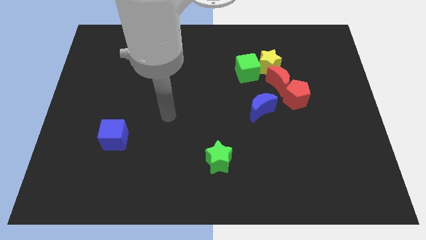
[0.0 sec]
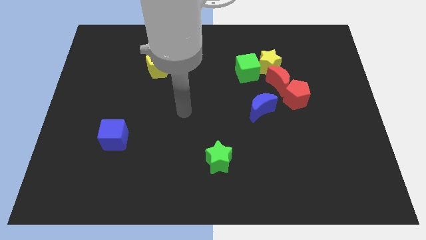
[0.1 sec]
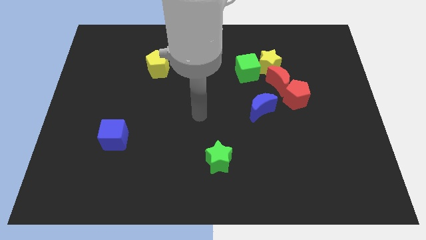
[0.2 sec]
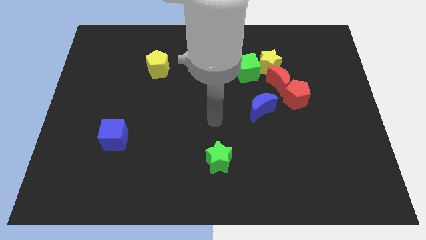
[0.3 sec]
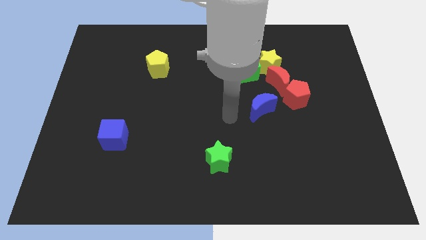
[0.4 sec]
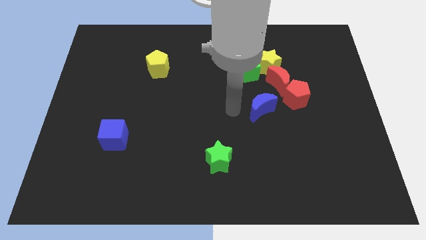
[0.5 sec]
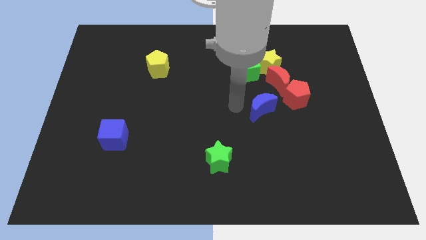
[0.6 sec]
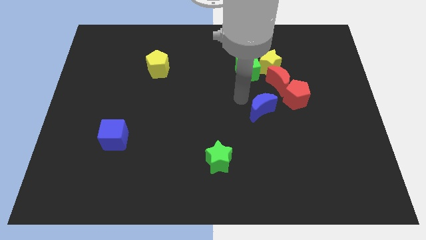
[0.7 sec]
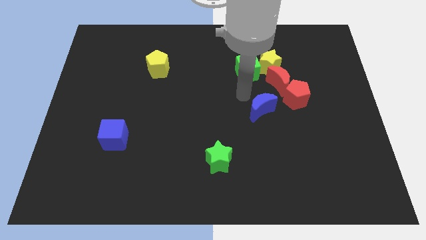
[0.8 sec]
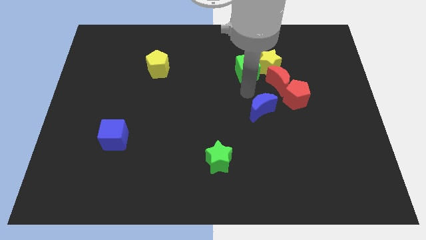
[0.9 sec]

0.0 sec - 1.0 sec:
go near the green cube

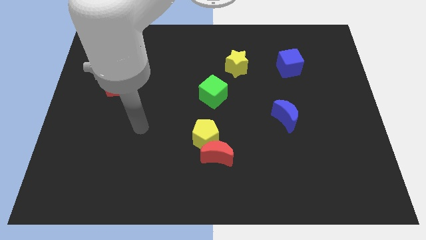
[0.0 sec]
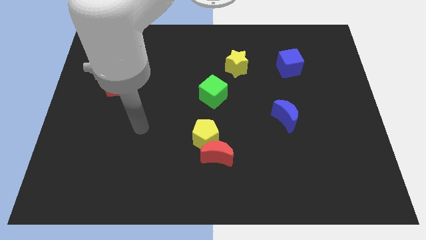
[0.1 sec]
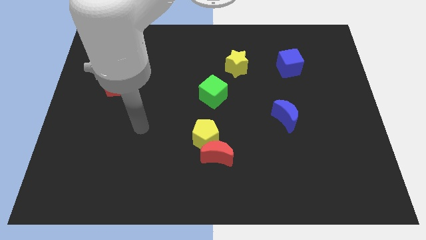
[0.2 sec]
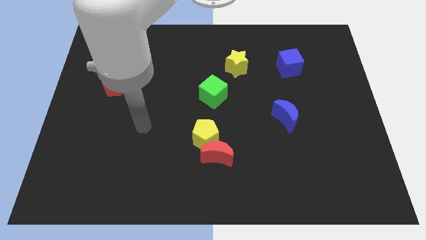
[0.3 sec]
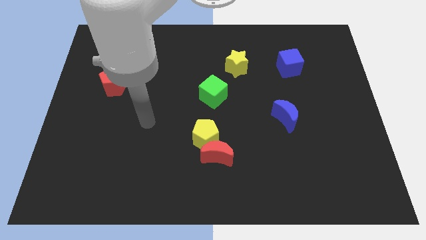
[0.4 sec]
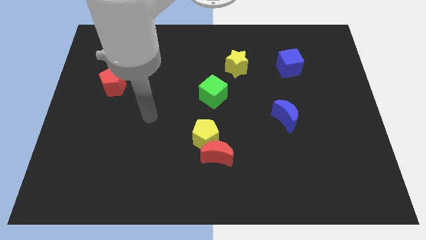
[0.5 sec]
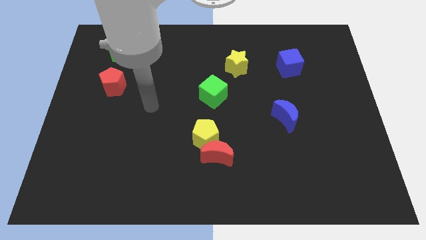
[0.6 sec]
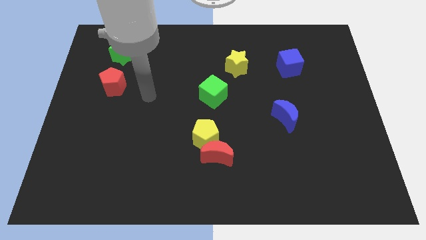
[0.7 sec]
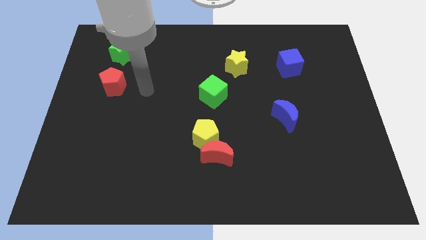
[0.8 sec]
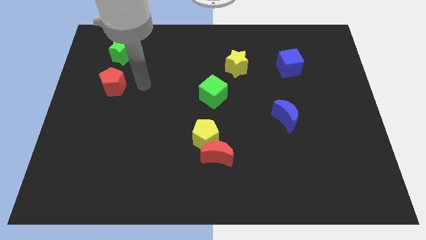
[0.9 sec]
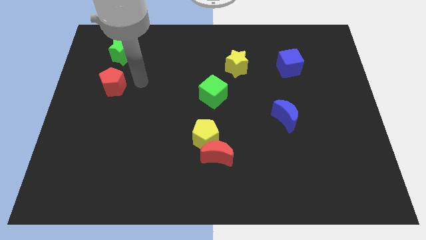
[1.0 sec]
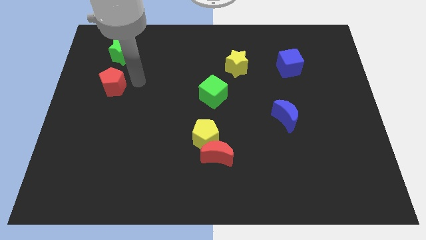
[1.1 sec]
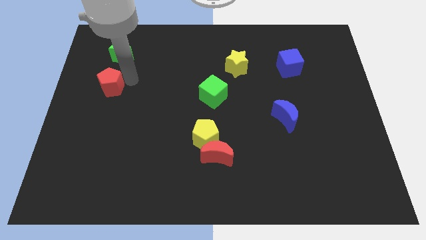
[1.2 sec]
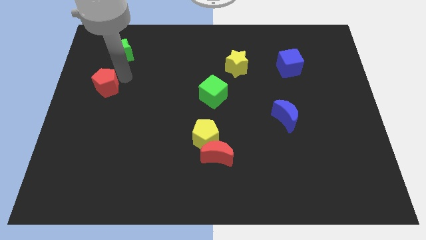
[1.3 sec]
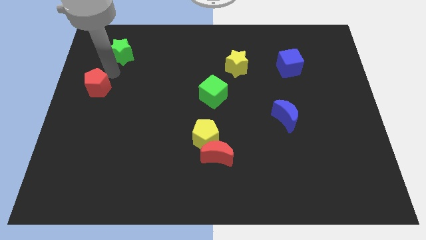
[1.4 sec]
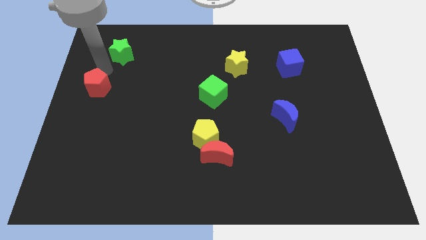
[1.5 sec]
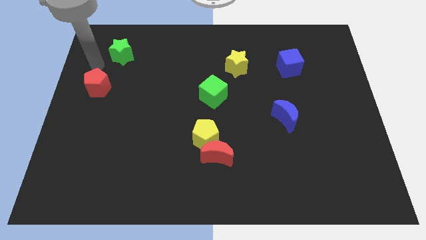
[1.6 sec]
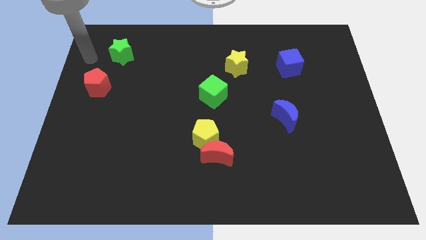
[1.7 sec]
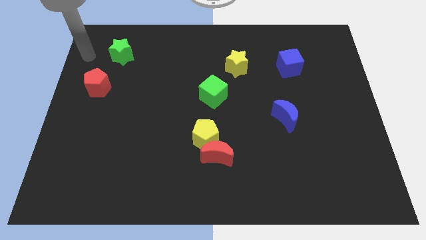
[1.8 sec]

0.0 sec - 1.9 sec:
slightly push the red pentagon to the left side

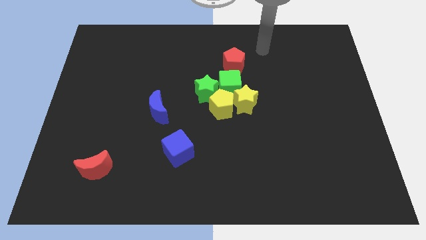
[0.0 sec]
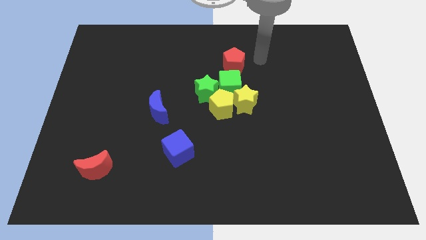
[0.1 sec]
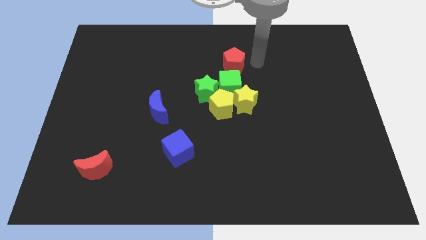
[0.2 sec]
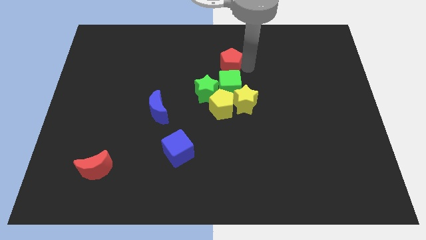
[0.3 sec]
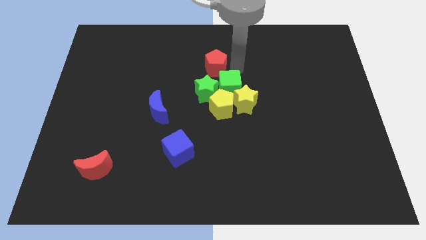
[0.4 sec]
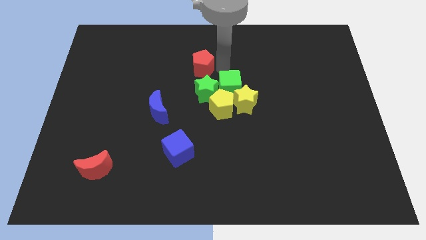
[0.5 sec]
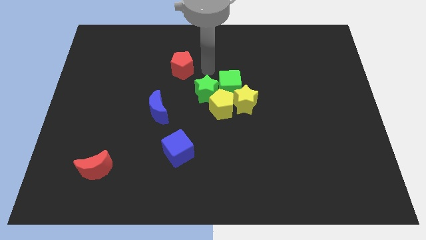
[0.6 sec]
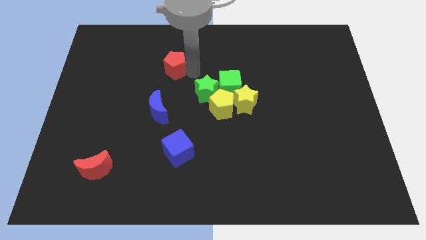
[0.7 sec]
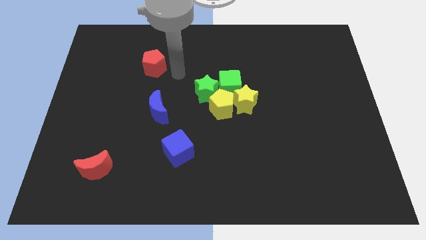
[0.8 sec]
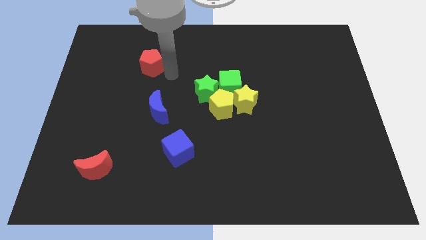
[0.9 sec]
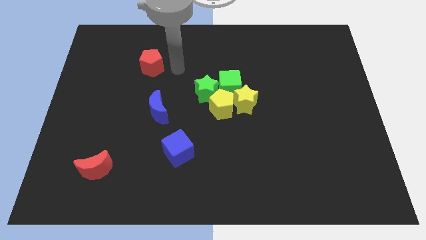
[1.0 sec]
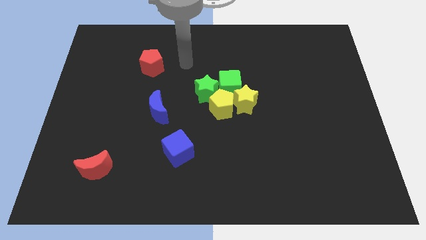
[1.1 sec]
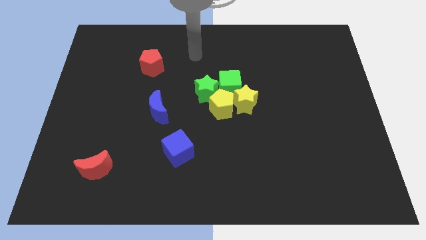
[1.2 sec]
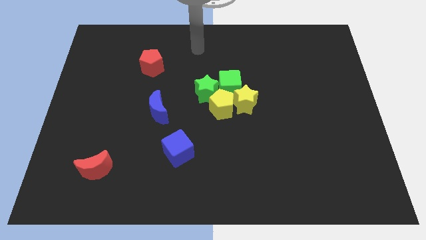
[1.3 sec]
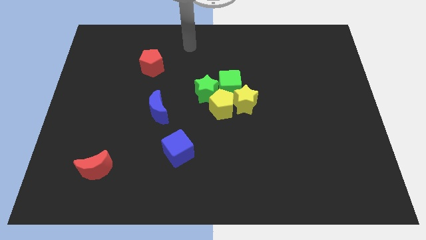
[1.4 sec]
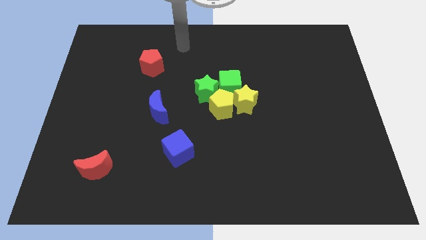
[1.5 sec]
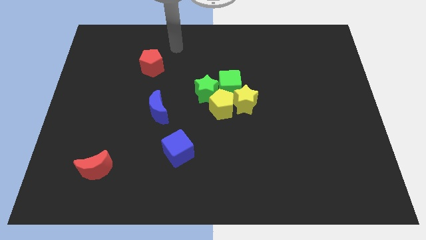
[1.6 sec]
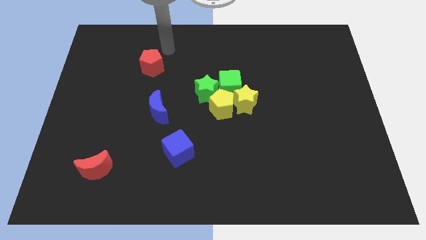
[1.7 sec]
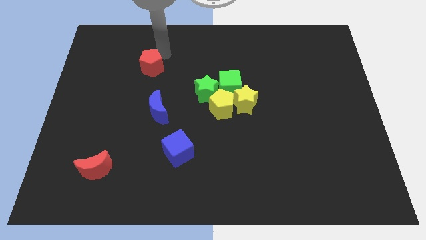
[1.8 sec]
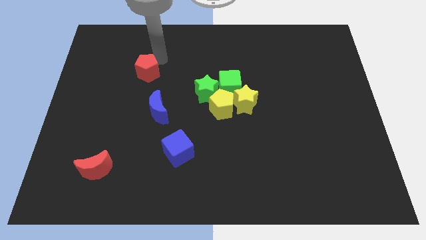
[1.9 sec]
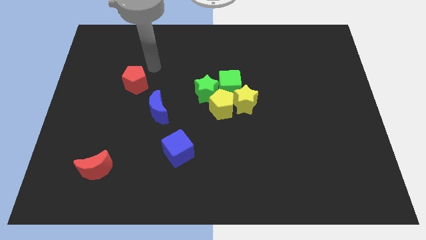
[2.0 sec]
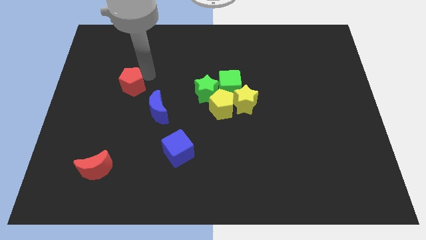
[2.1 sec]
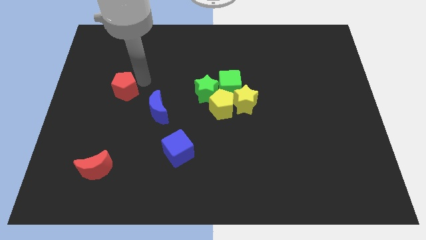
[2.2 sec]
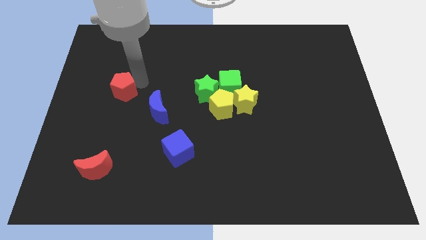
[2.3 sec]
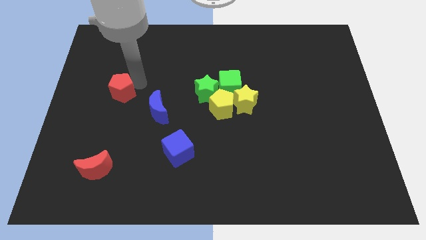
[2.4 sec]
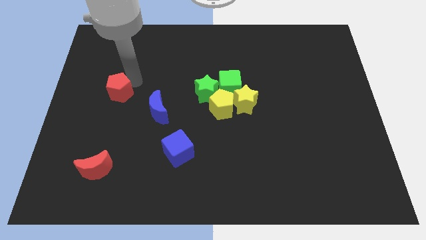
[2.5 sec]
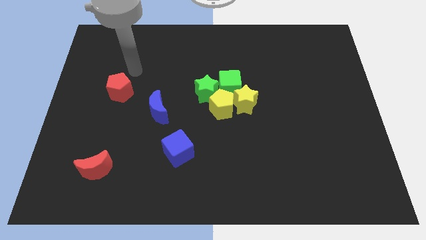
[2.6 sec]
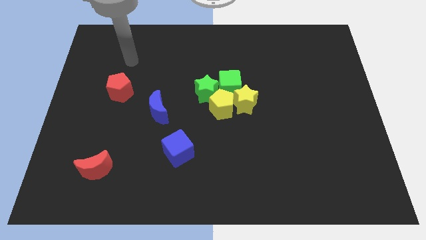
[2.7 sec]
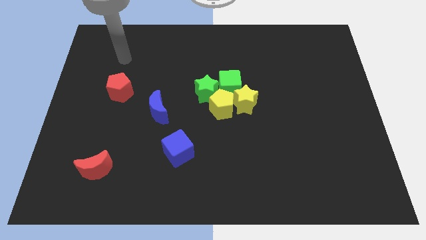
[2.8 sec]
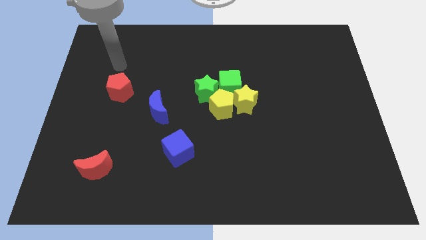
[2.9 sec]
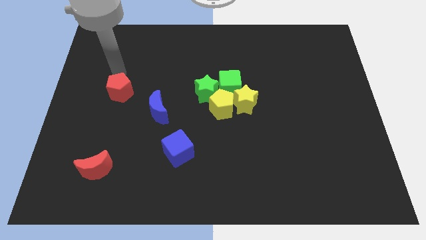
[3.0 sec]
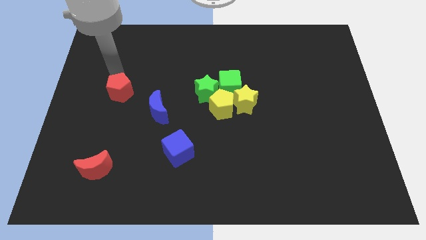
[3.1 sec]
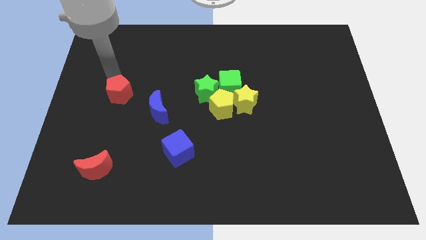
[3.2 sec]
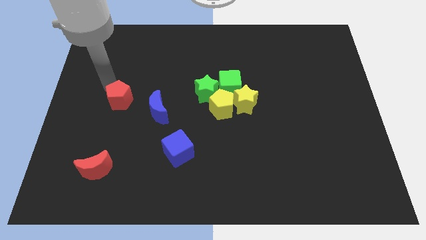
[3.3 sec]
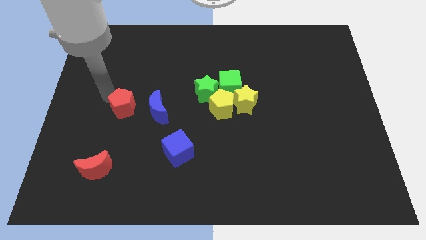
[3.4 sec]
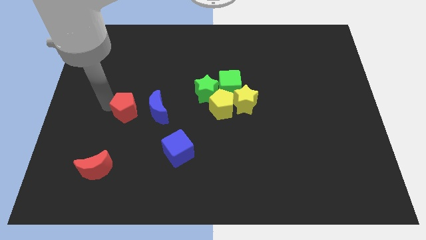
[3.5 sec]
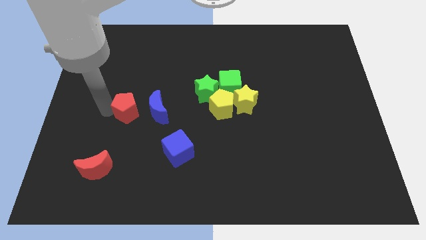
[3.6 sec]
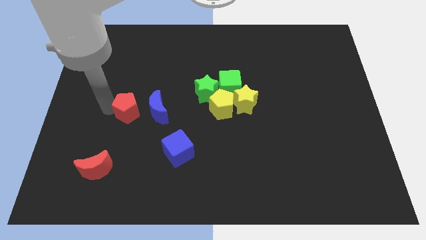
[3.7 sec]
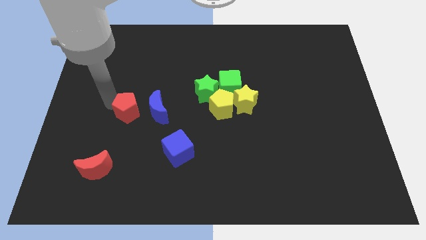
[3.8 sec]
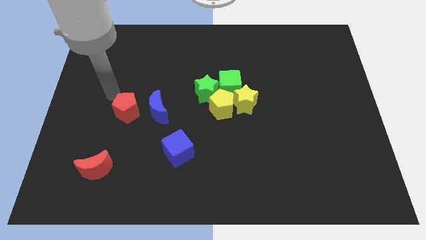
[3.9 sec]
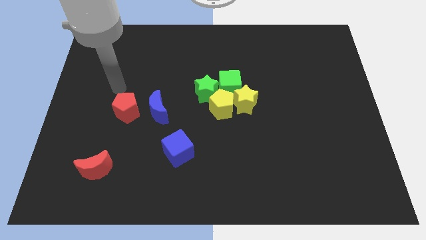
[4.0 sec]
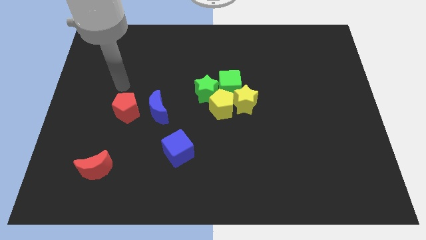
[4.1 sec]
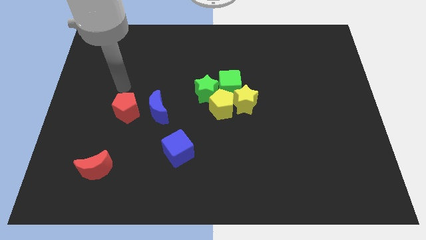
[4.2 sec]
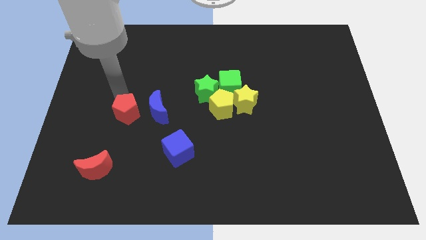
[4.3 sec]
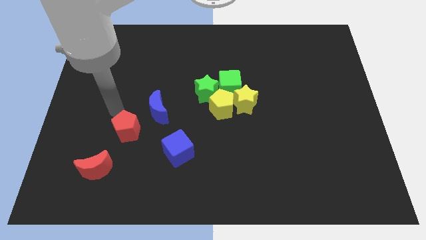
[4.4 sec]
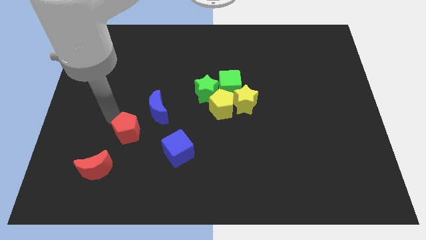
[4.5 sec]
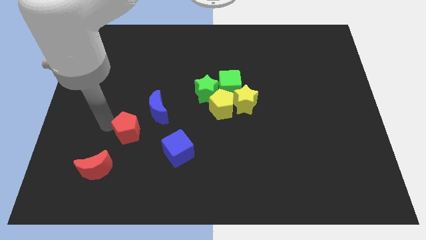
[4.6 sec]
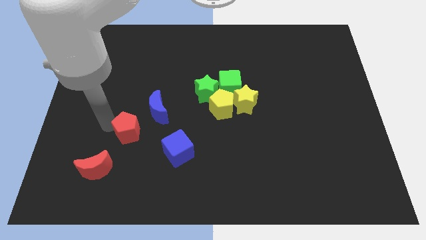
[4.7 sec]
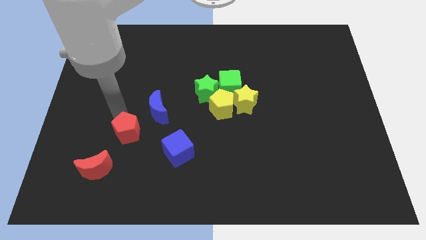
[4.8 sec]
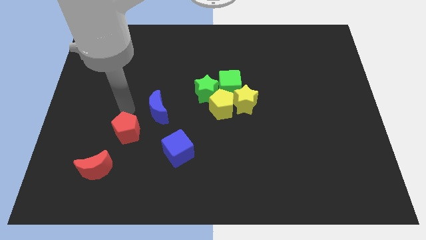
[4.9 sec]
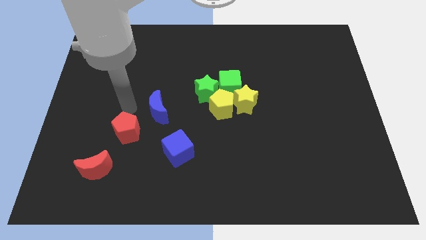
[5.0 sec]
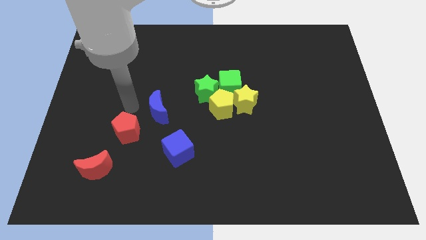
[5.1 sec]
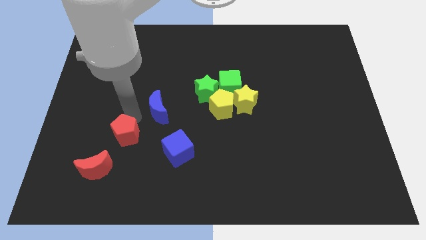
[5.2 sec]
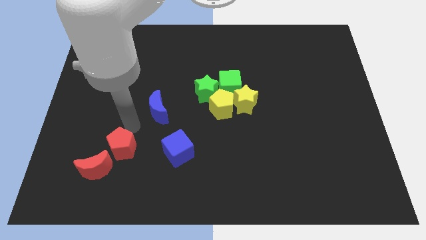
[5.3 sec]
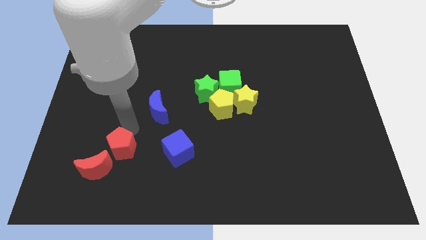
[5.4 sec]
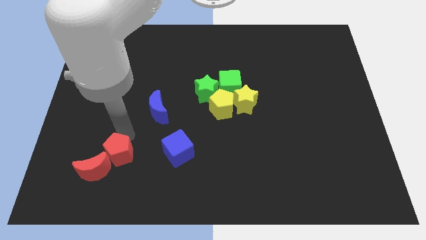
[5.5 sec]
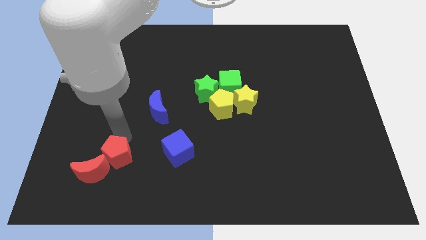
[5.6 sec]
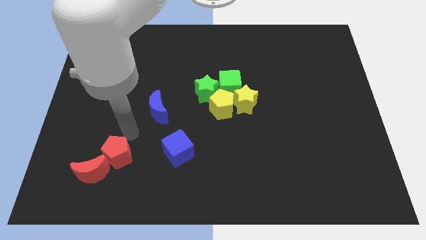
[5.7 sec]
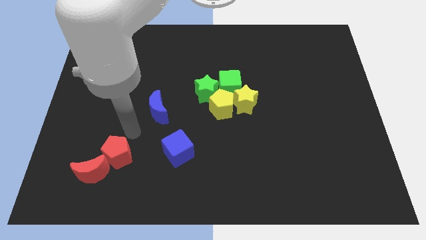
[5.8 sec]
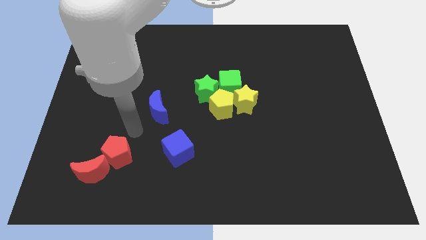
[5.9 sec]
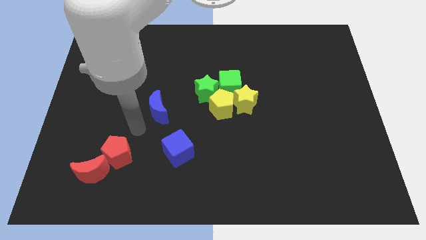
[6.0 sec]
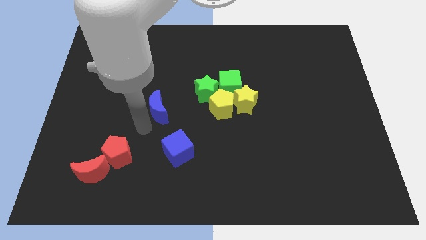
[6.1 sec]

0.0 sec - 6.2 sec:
push the red pentagon to the right of the red crescent
